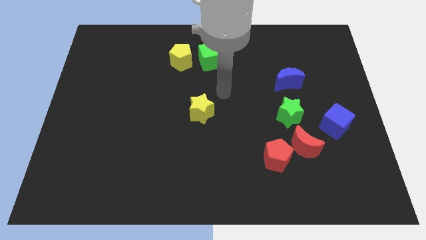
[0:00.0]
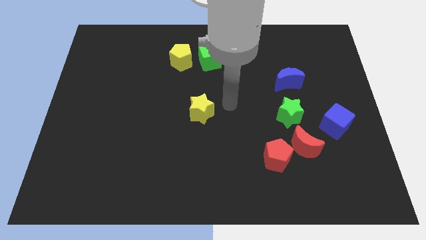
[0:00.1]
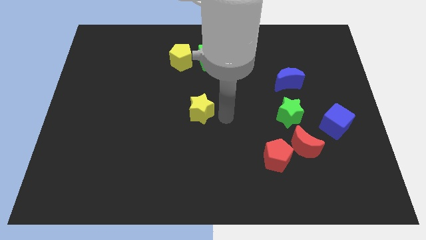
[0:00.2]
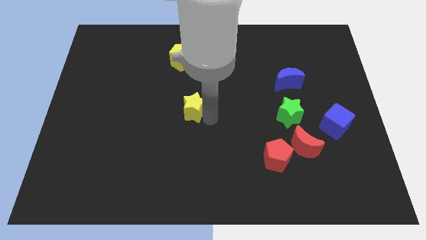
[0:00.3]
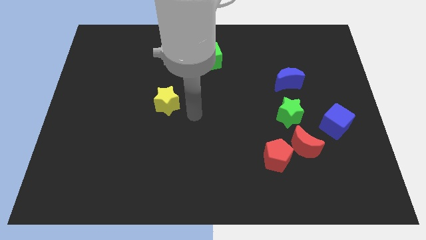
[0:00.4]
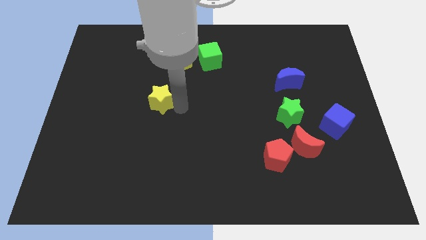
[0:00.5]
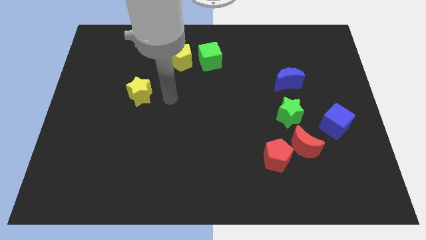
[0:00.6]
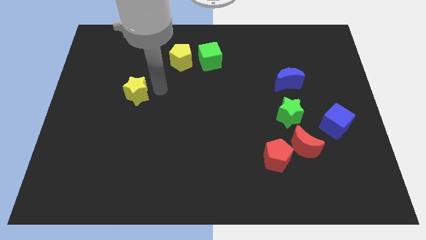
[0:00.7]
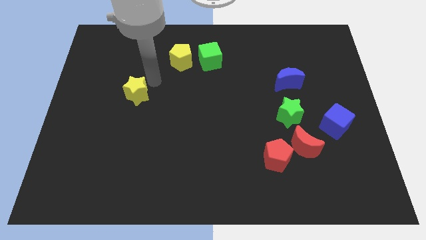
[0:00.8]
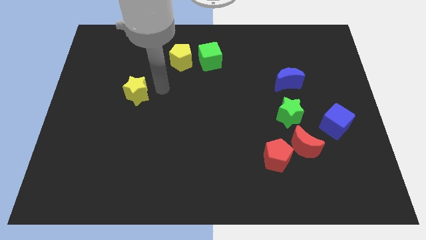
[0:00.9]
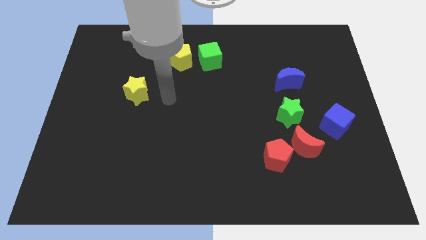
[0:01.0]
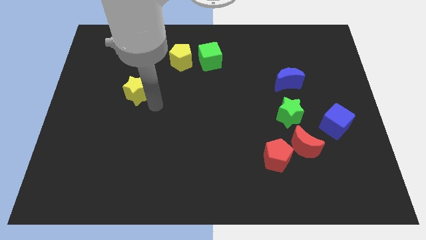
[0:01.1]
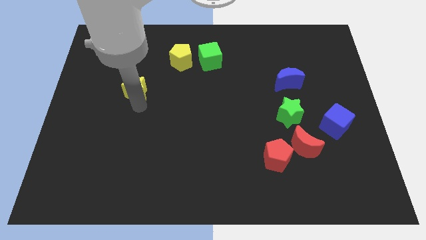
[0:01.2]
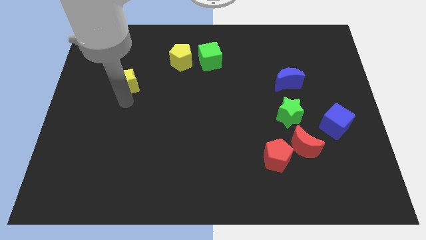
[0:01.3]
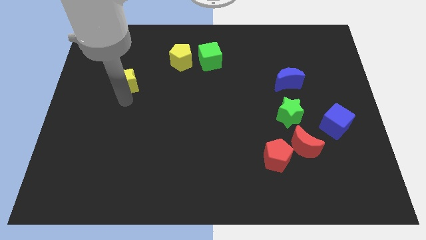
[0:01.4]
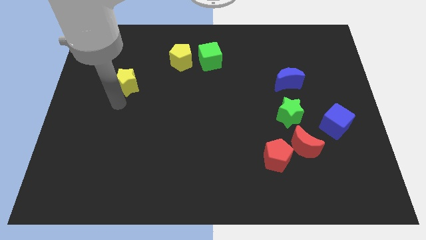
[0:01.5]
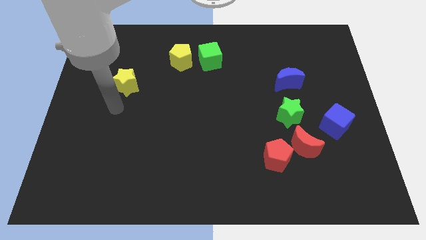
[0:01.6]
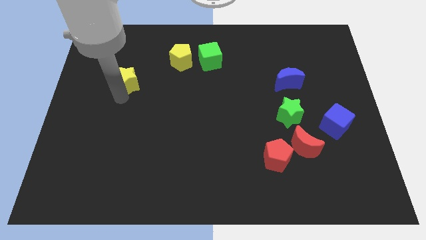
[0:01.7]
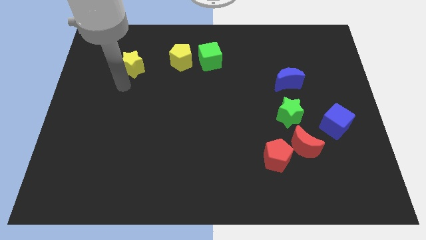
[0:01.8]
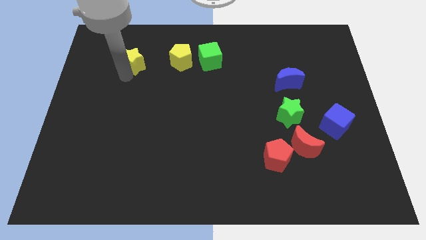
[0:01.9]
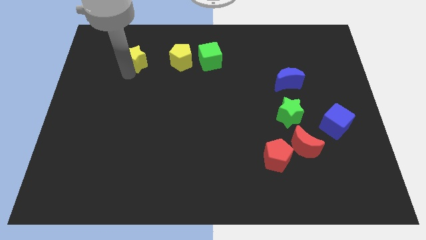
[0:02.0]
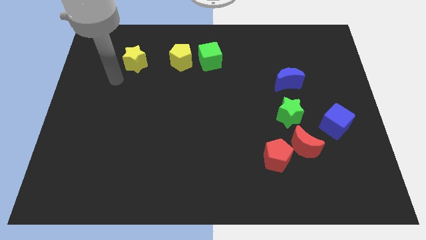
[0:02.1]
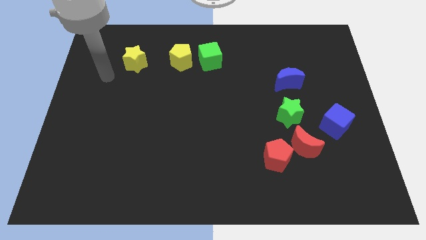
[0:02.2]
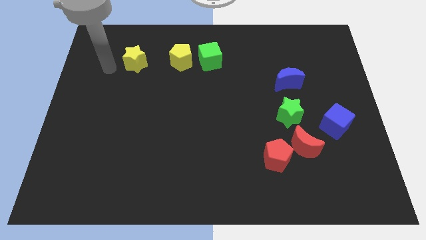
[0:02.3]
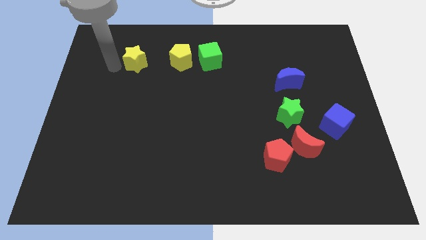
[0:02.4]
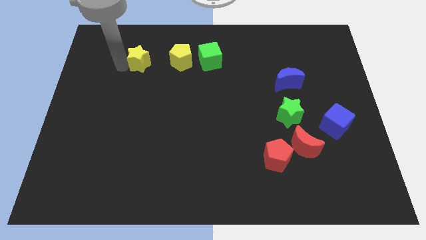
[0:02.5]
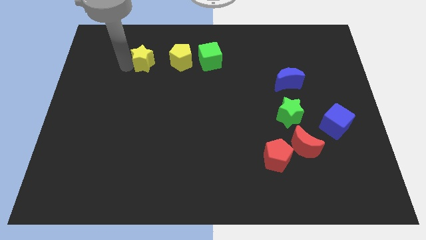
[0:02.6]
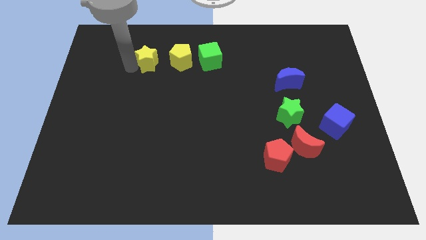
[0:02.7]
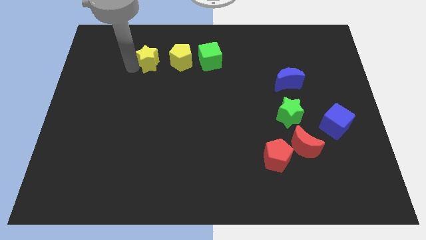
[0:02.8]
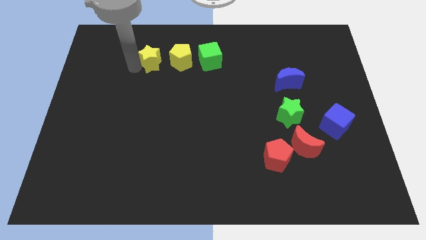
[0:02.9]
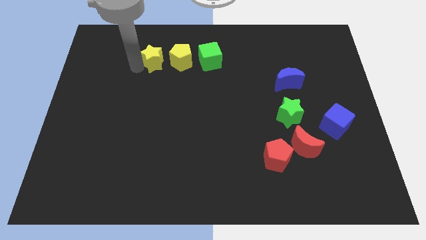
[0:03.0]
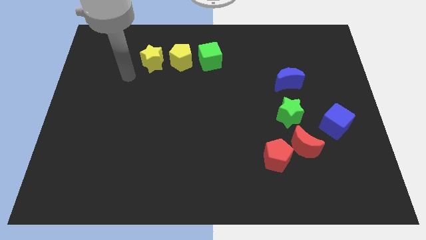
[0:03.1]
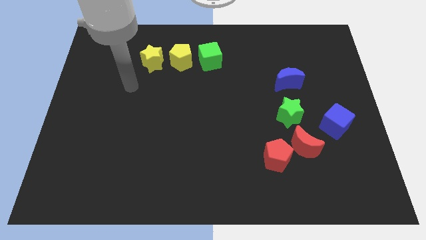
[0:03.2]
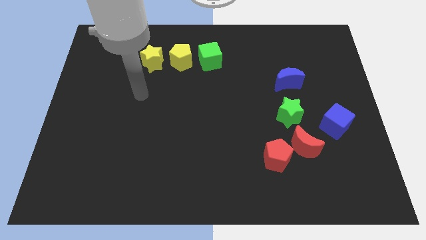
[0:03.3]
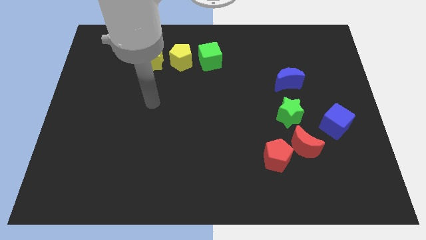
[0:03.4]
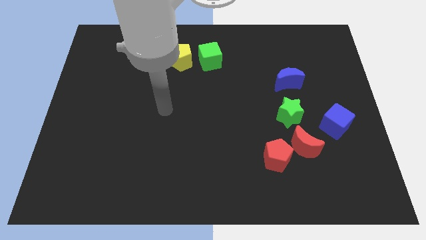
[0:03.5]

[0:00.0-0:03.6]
push yellow star to the left of yellow pentagon

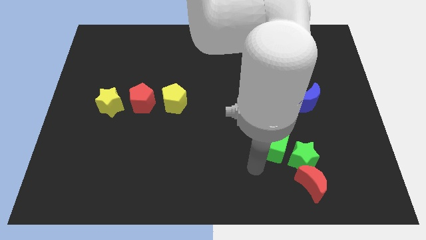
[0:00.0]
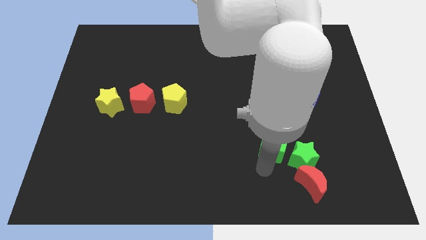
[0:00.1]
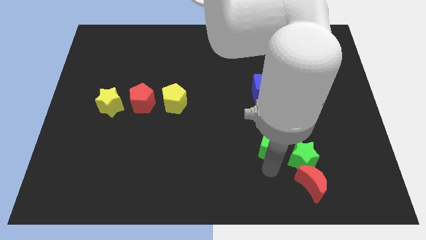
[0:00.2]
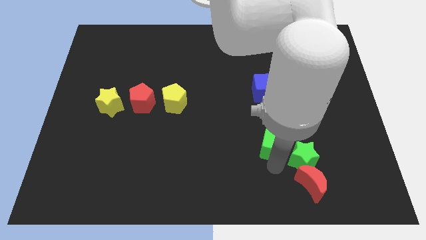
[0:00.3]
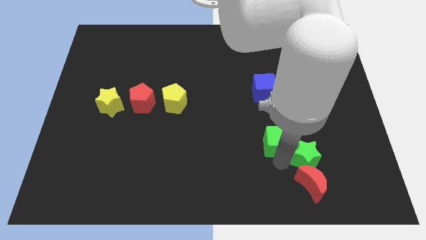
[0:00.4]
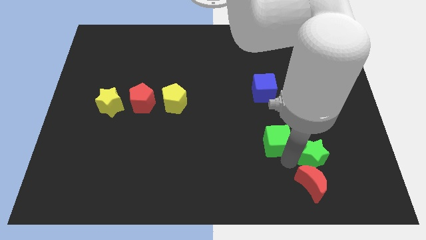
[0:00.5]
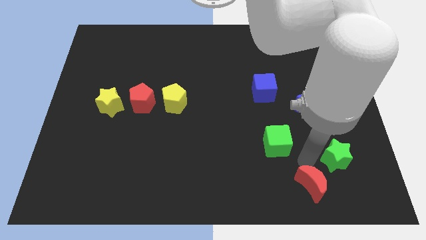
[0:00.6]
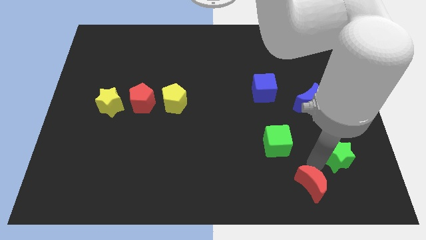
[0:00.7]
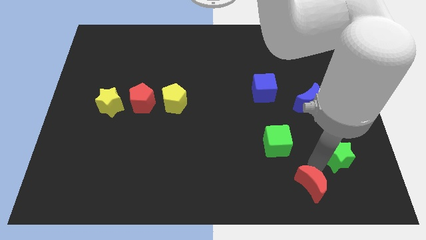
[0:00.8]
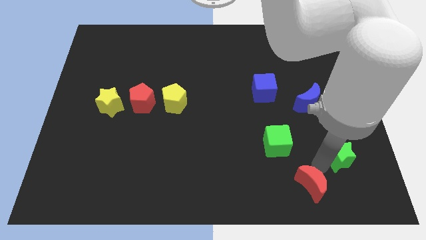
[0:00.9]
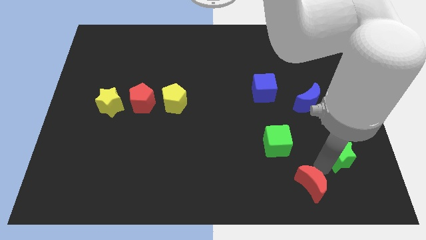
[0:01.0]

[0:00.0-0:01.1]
seperate the green blocks

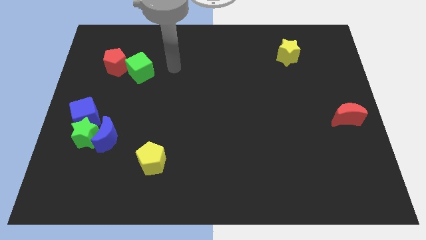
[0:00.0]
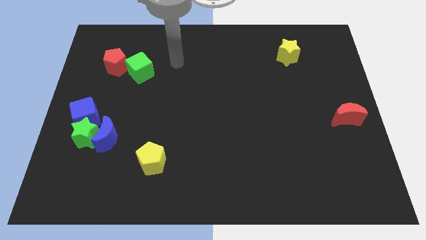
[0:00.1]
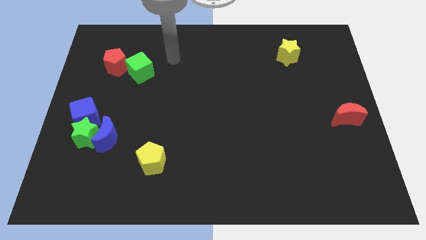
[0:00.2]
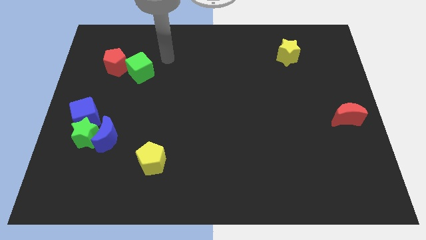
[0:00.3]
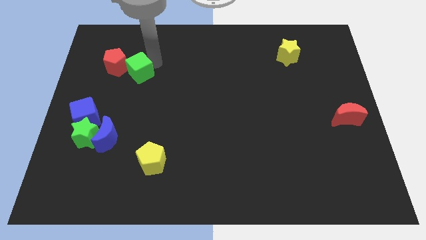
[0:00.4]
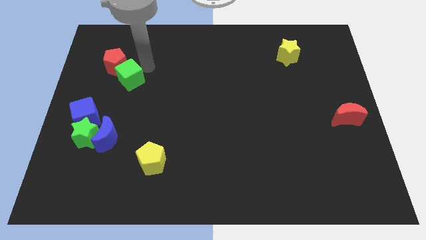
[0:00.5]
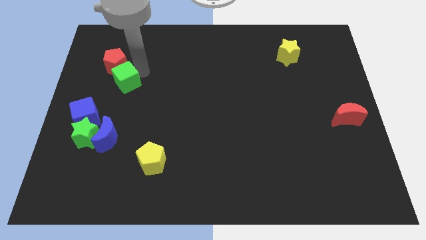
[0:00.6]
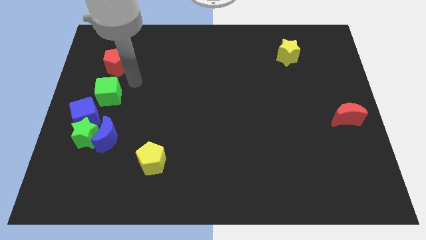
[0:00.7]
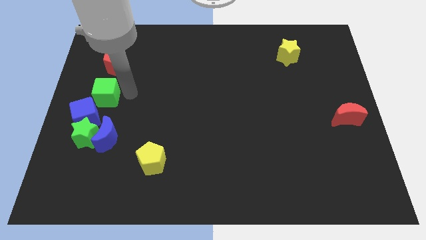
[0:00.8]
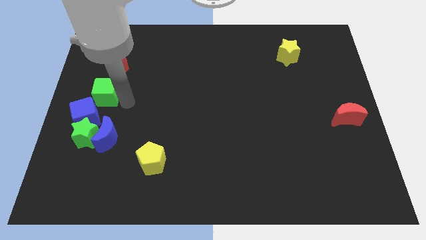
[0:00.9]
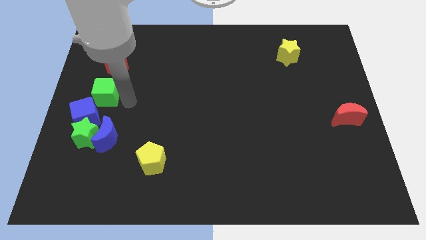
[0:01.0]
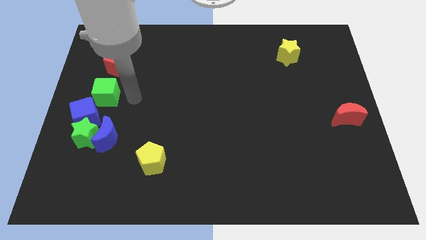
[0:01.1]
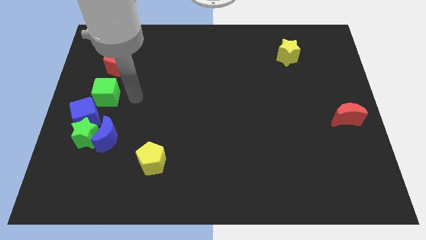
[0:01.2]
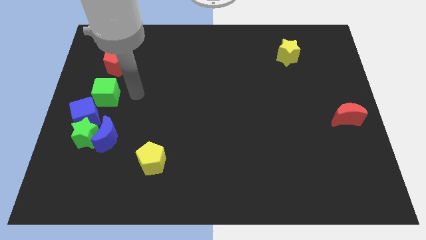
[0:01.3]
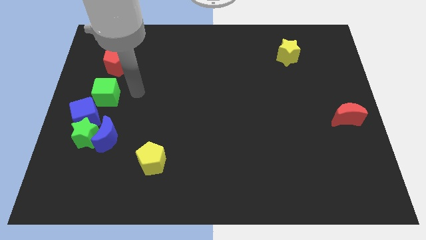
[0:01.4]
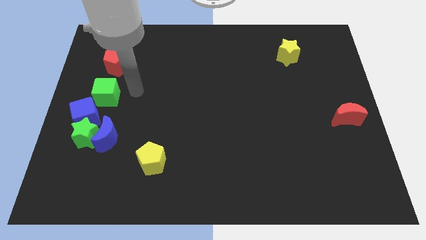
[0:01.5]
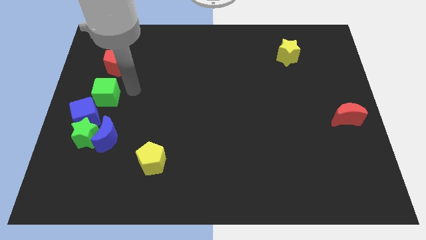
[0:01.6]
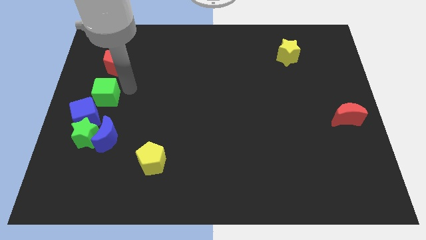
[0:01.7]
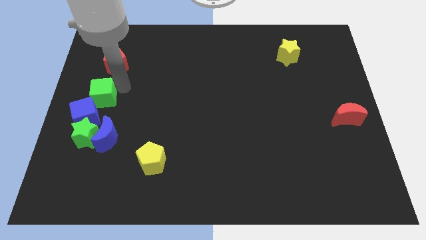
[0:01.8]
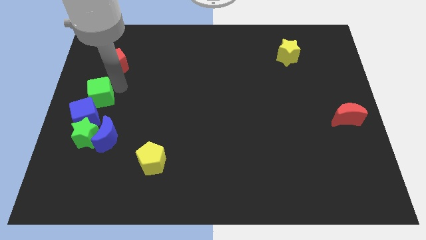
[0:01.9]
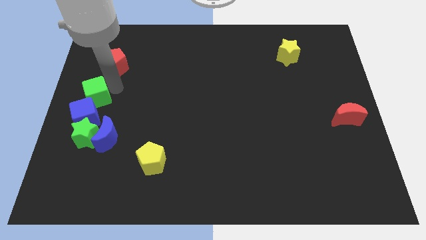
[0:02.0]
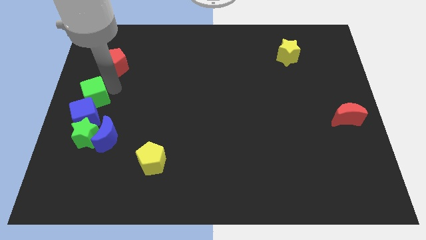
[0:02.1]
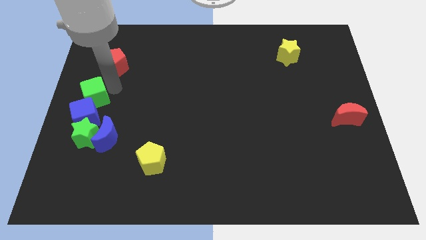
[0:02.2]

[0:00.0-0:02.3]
place the green cube close to the blue cube

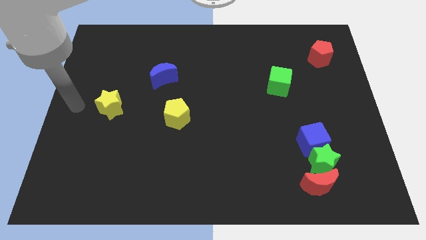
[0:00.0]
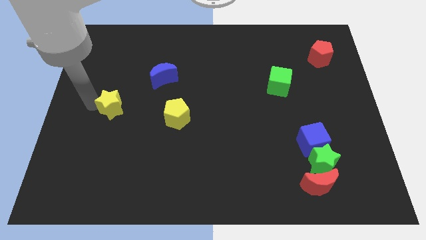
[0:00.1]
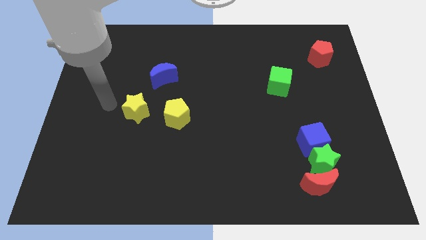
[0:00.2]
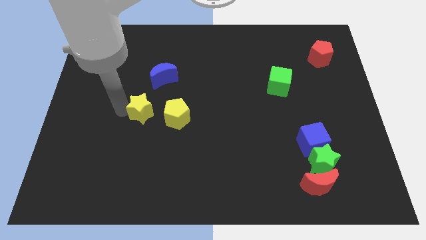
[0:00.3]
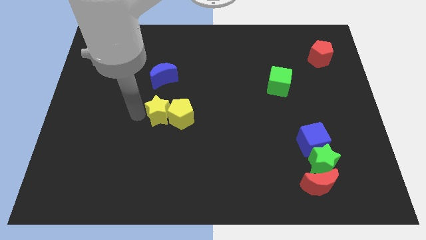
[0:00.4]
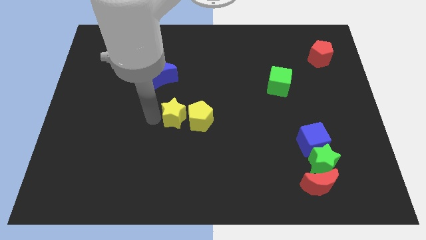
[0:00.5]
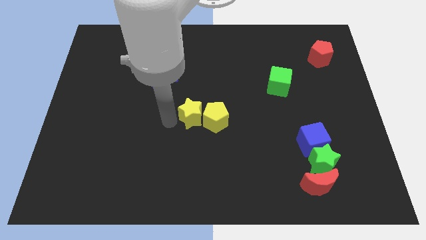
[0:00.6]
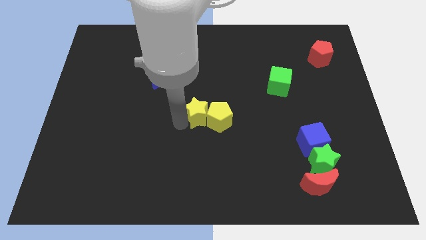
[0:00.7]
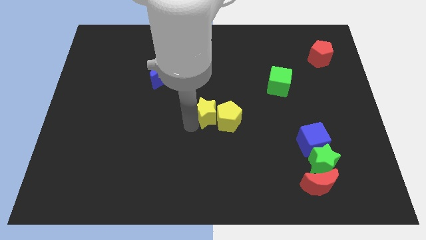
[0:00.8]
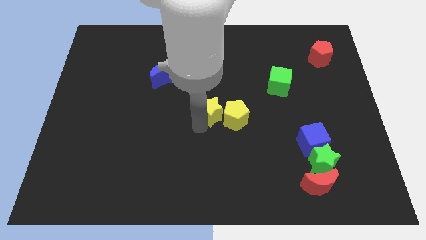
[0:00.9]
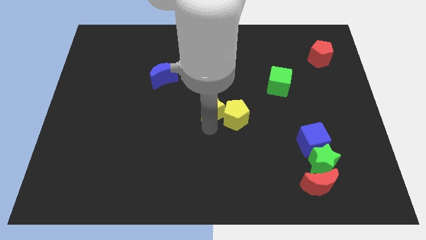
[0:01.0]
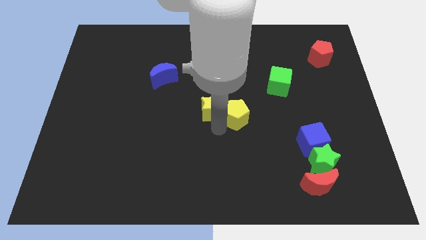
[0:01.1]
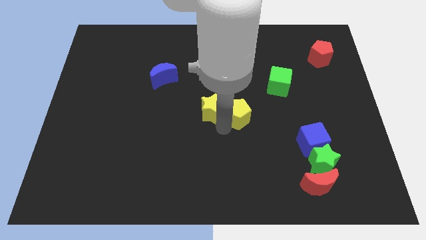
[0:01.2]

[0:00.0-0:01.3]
place the yellow blocks at the center

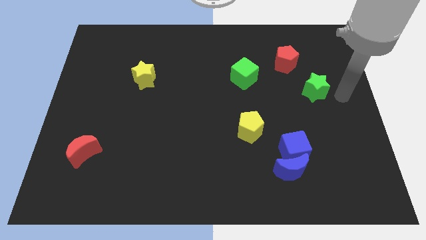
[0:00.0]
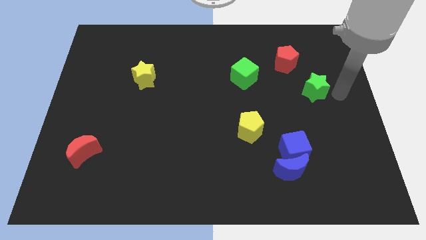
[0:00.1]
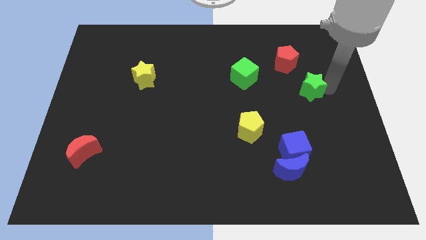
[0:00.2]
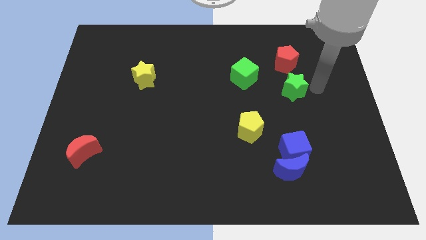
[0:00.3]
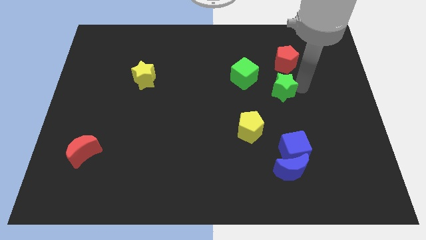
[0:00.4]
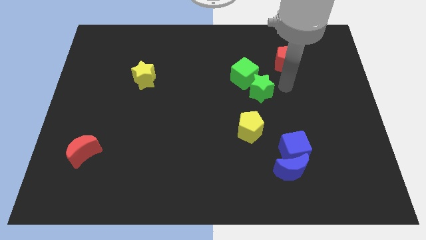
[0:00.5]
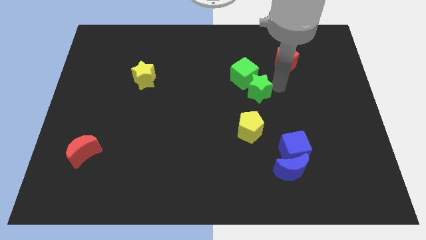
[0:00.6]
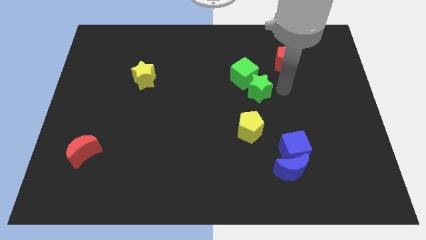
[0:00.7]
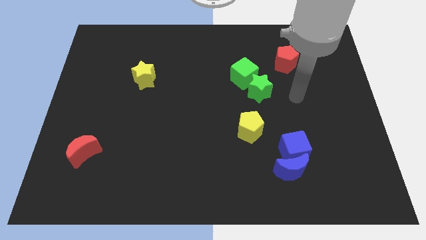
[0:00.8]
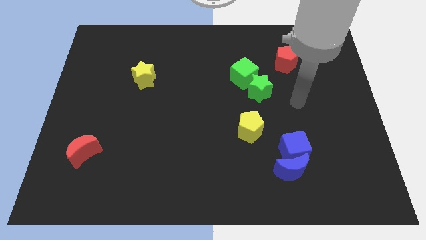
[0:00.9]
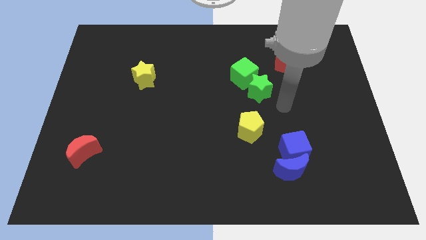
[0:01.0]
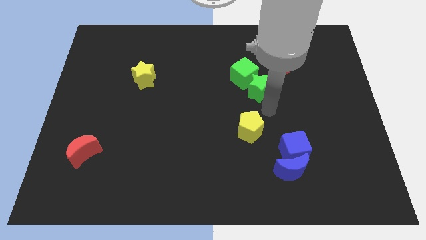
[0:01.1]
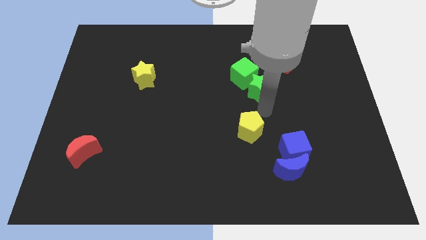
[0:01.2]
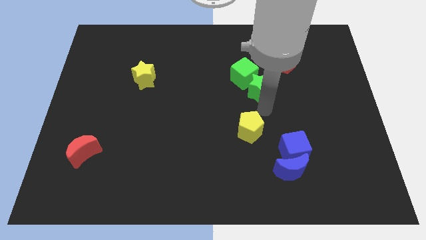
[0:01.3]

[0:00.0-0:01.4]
push the green star towards the green cube
